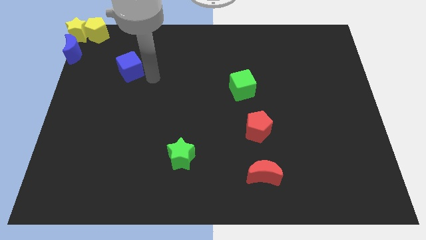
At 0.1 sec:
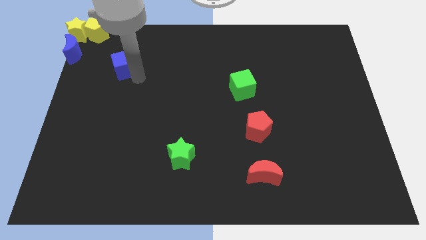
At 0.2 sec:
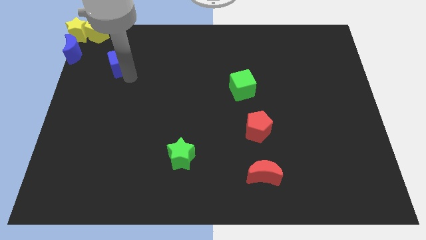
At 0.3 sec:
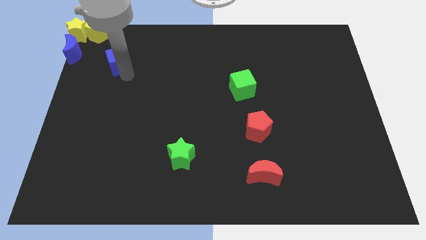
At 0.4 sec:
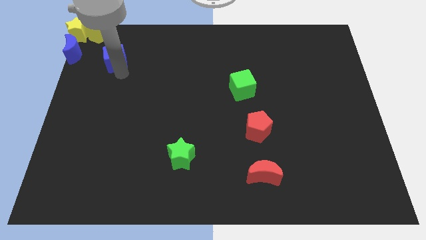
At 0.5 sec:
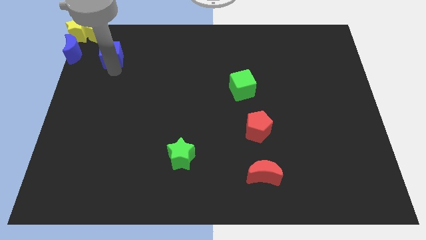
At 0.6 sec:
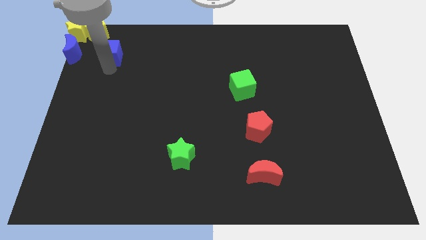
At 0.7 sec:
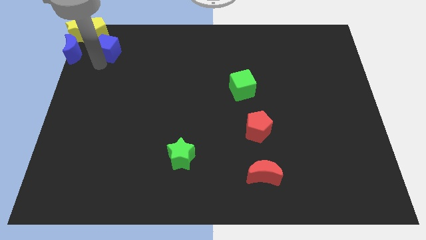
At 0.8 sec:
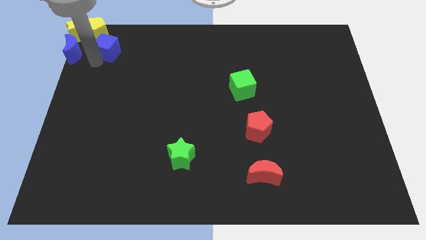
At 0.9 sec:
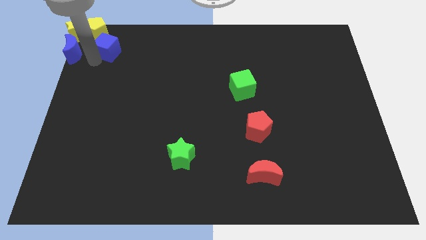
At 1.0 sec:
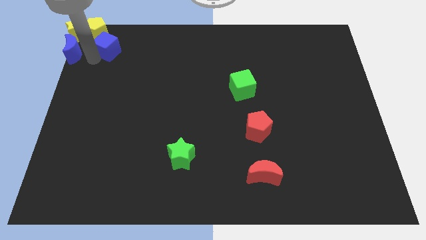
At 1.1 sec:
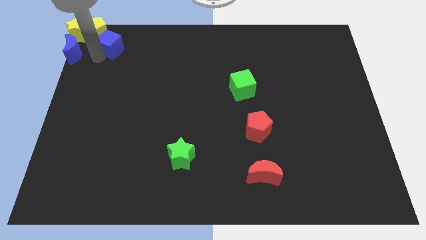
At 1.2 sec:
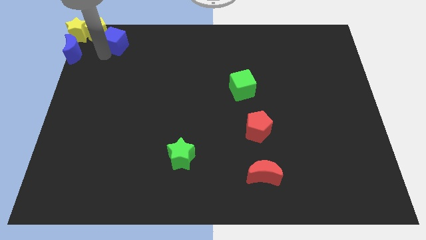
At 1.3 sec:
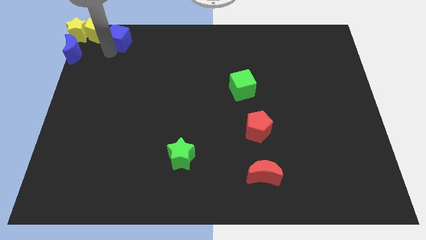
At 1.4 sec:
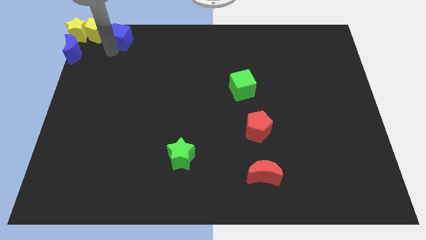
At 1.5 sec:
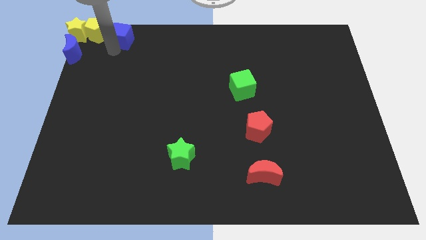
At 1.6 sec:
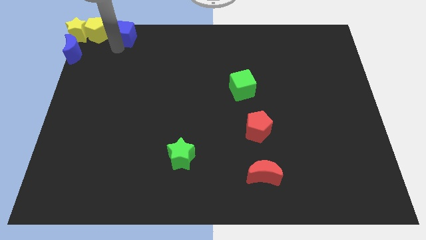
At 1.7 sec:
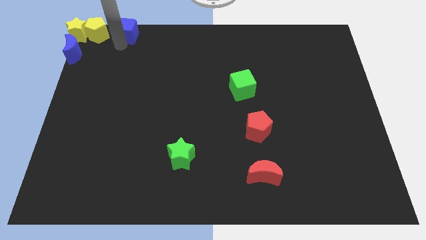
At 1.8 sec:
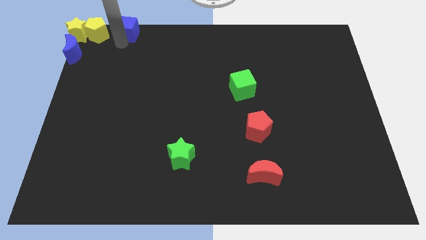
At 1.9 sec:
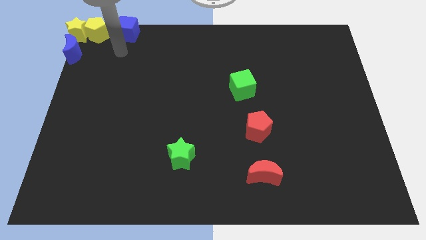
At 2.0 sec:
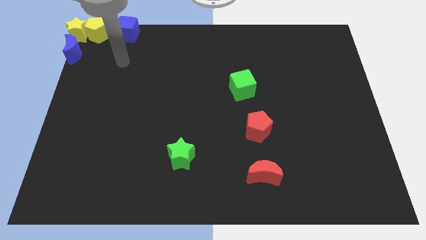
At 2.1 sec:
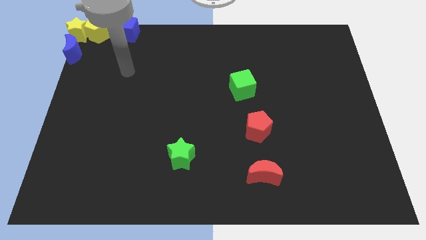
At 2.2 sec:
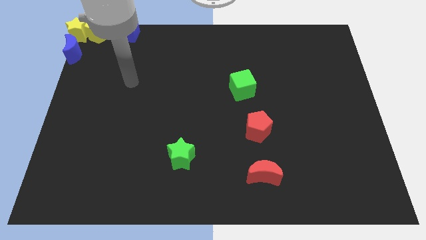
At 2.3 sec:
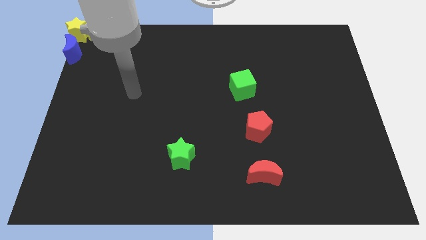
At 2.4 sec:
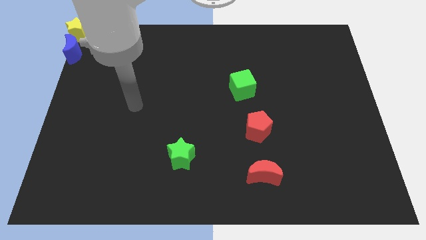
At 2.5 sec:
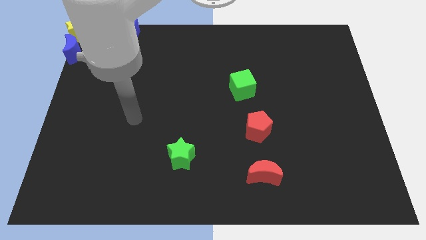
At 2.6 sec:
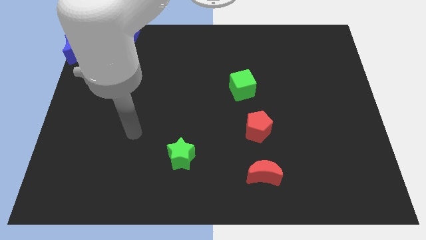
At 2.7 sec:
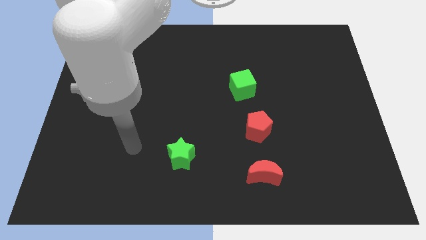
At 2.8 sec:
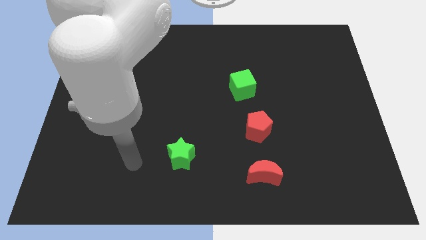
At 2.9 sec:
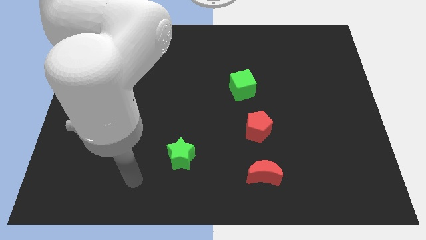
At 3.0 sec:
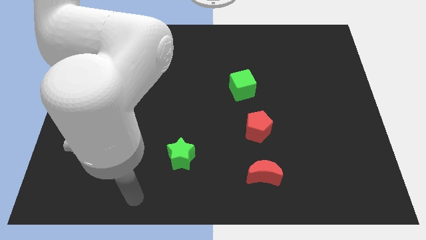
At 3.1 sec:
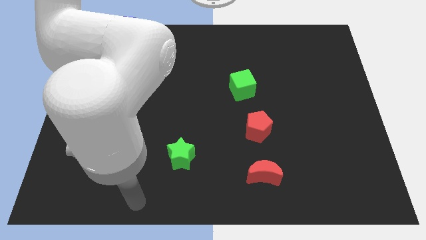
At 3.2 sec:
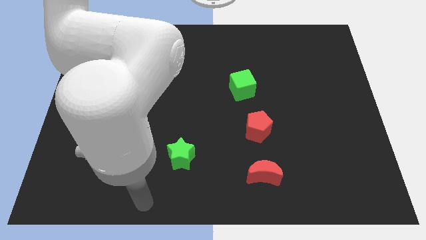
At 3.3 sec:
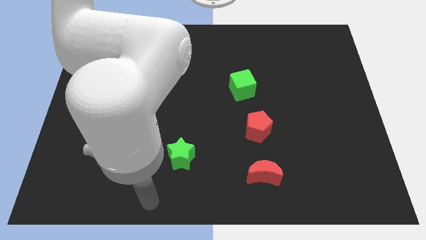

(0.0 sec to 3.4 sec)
move the blue cube to the right side of the yellow pentagon

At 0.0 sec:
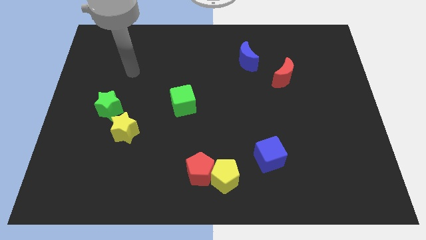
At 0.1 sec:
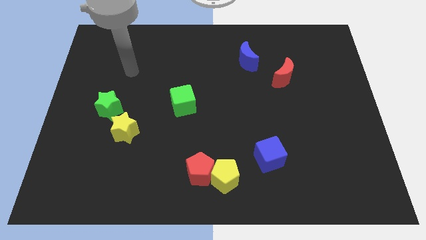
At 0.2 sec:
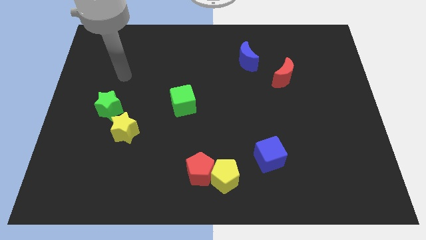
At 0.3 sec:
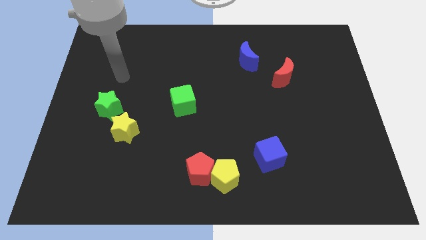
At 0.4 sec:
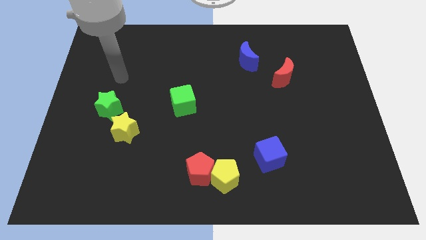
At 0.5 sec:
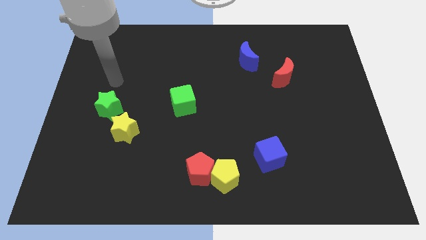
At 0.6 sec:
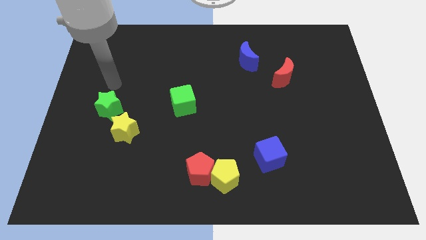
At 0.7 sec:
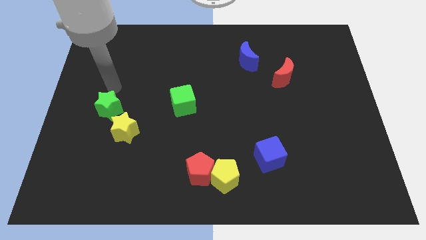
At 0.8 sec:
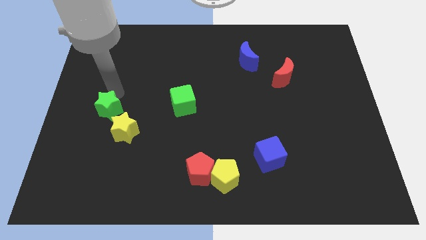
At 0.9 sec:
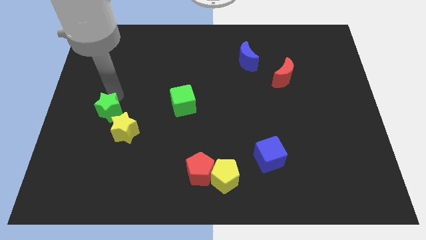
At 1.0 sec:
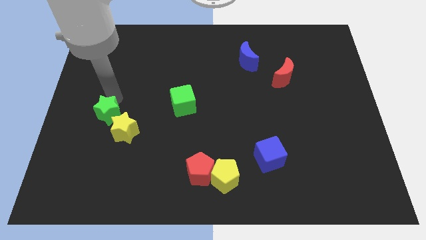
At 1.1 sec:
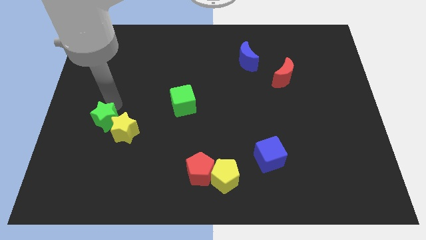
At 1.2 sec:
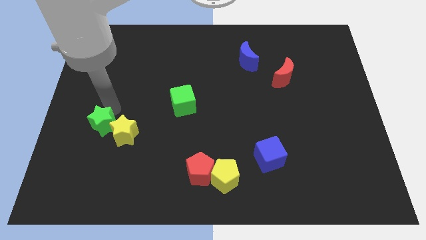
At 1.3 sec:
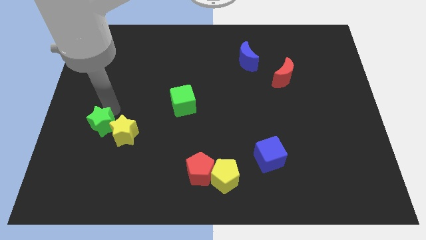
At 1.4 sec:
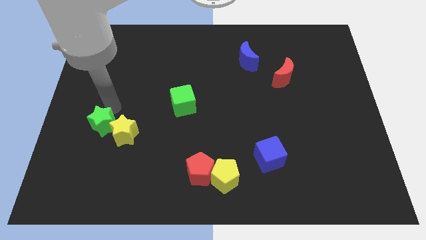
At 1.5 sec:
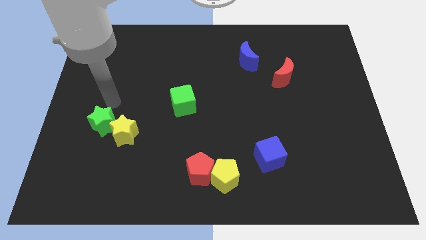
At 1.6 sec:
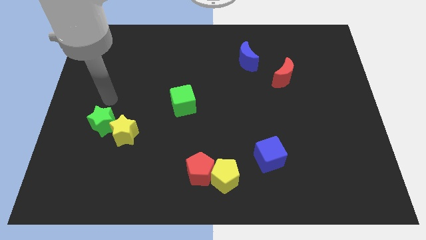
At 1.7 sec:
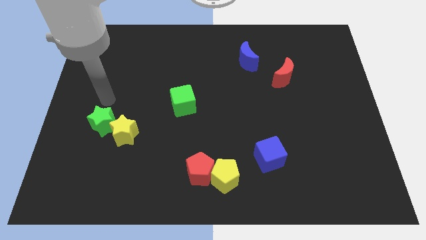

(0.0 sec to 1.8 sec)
push the green star into the yellow star

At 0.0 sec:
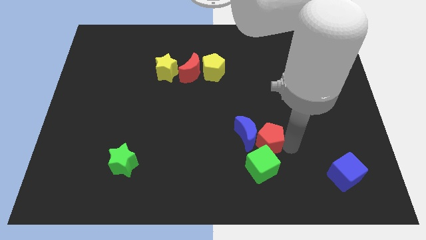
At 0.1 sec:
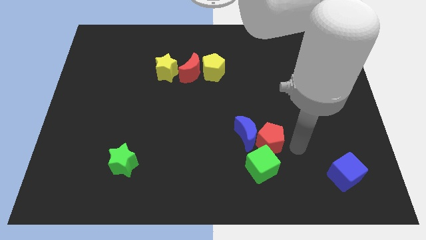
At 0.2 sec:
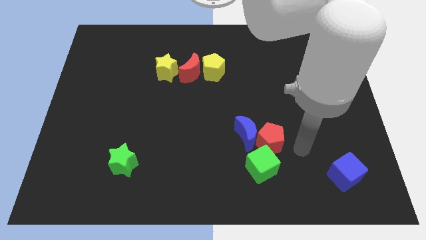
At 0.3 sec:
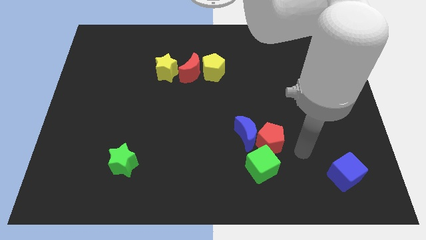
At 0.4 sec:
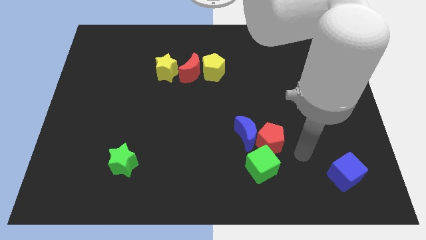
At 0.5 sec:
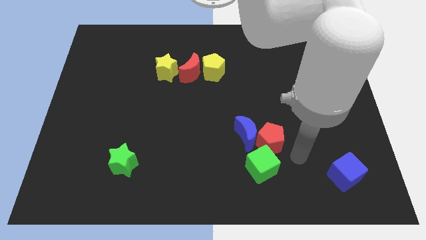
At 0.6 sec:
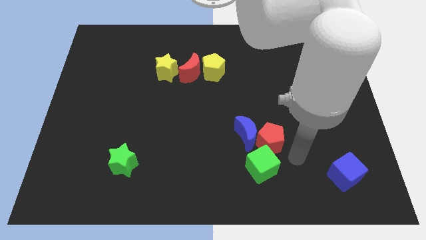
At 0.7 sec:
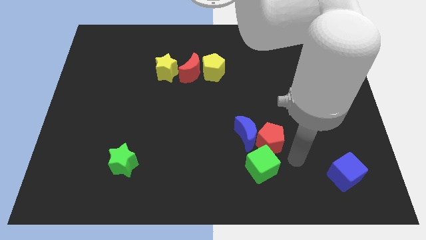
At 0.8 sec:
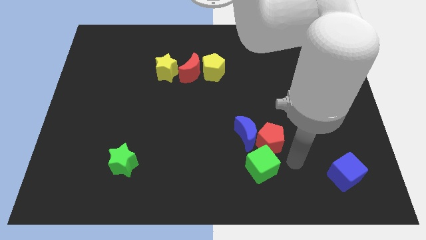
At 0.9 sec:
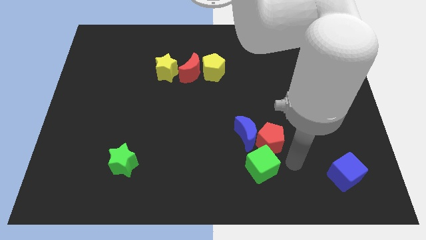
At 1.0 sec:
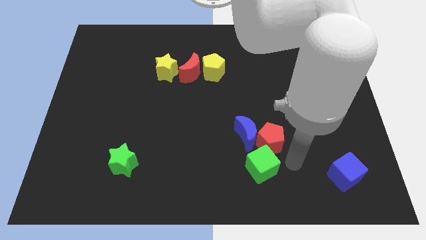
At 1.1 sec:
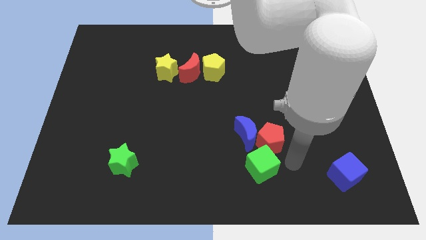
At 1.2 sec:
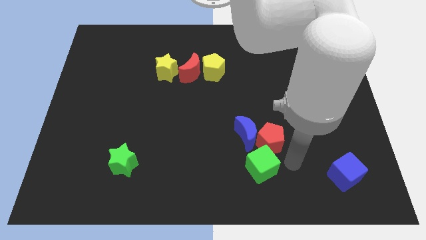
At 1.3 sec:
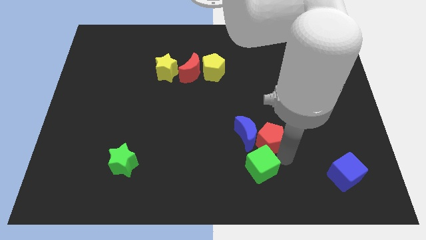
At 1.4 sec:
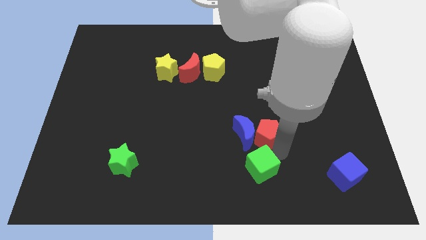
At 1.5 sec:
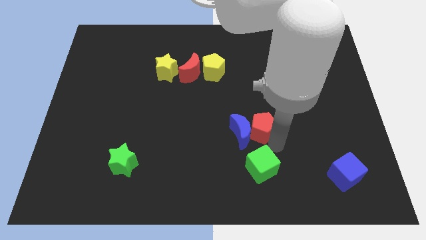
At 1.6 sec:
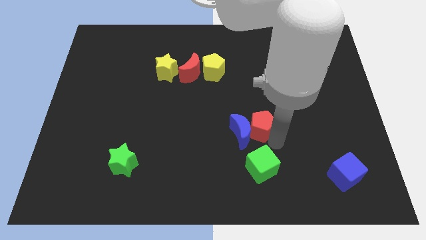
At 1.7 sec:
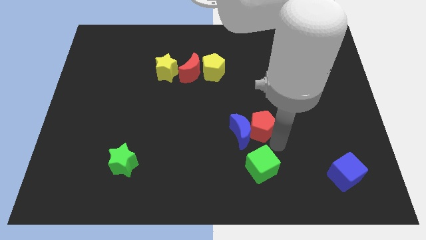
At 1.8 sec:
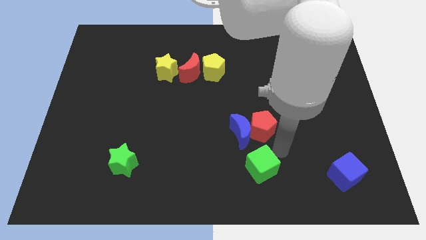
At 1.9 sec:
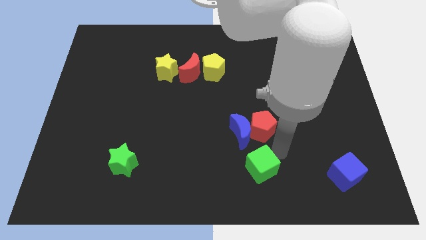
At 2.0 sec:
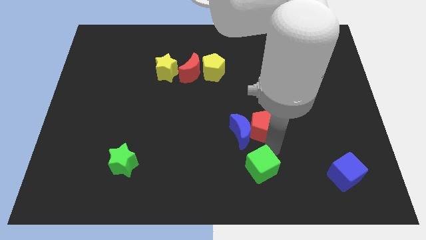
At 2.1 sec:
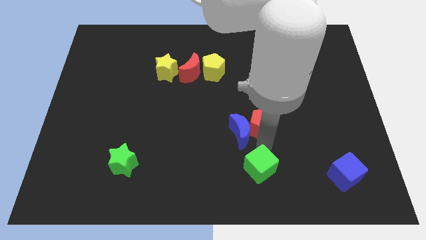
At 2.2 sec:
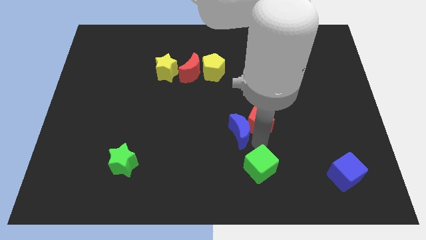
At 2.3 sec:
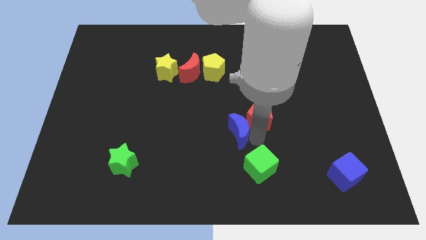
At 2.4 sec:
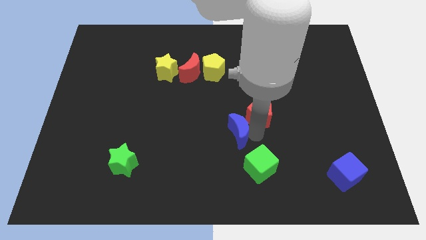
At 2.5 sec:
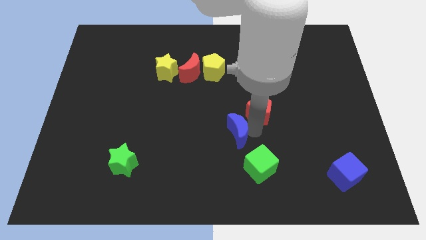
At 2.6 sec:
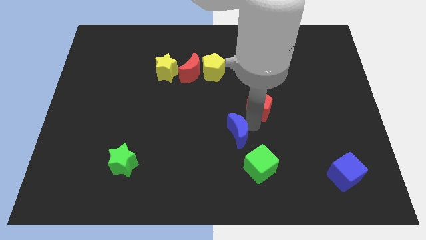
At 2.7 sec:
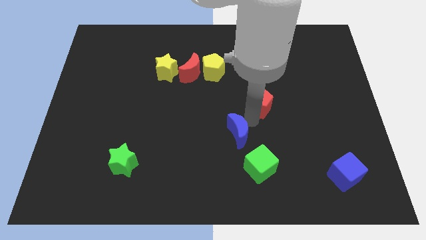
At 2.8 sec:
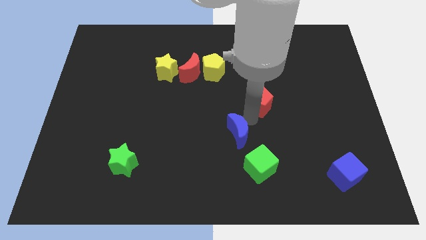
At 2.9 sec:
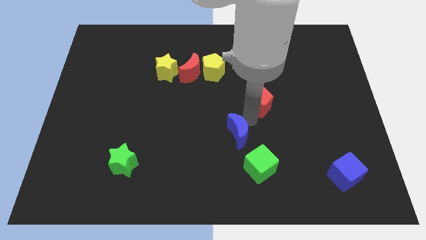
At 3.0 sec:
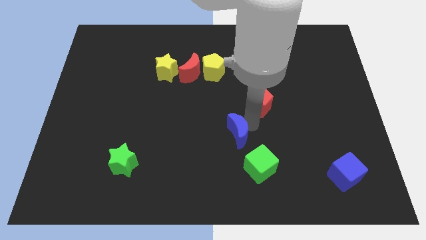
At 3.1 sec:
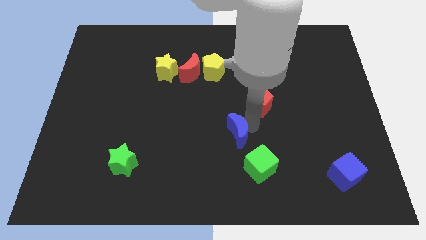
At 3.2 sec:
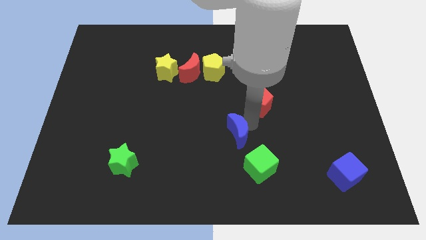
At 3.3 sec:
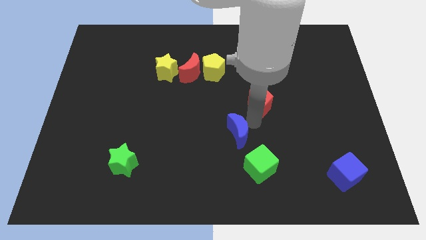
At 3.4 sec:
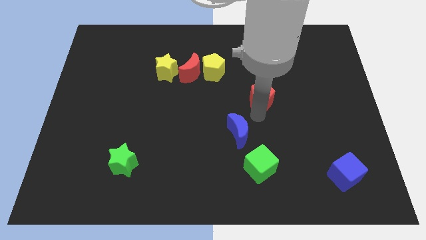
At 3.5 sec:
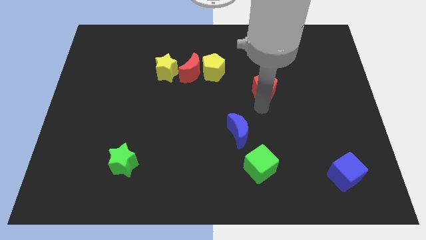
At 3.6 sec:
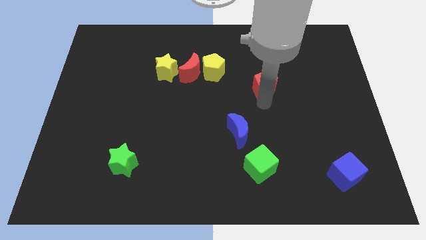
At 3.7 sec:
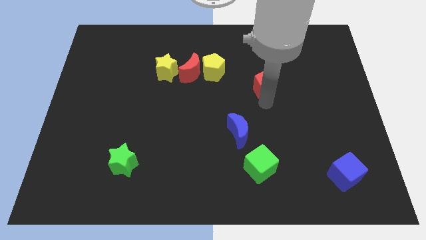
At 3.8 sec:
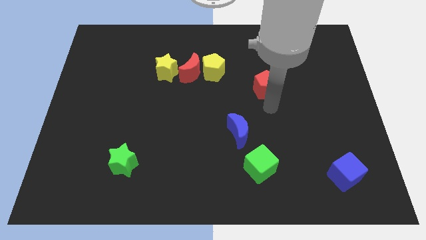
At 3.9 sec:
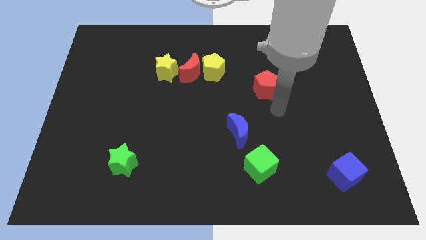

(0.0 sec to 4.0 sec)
separate the green cube and the red pentagon
